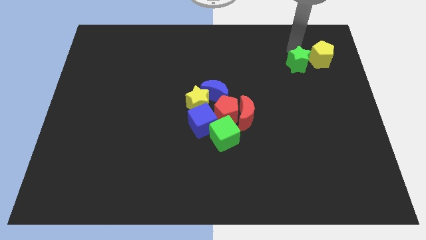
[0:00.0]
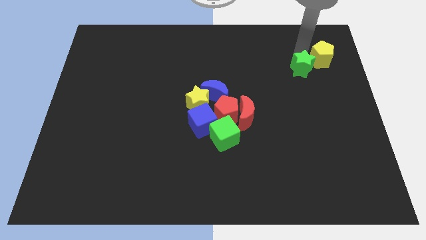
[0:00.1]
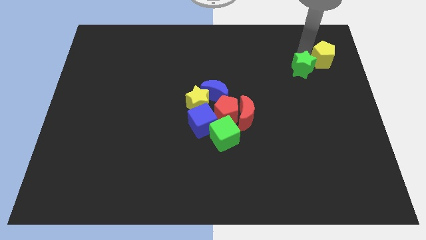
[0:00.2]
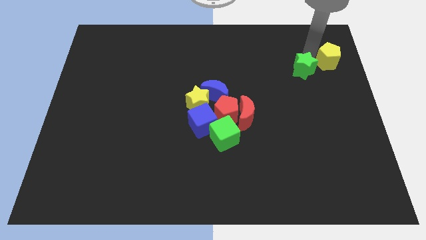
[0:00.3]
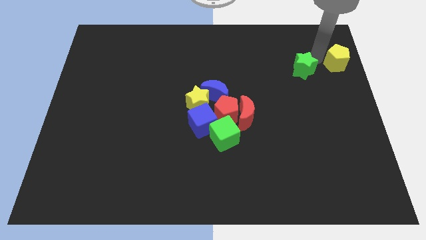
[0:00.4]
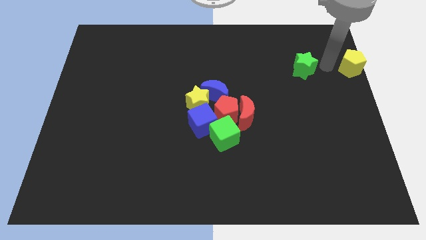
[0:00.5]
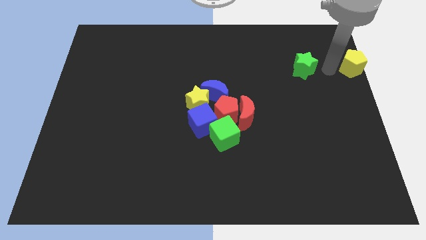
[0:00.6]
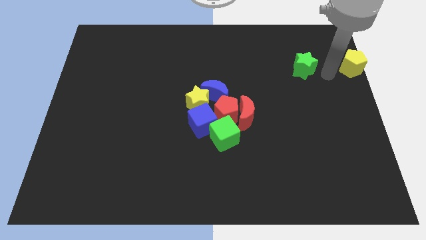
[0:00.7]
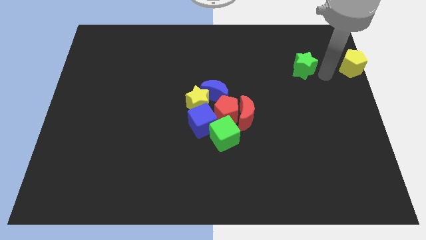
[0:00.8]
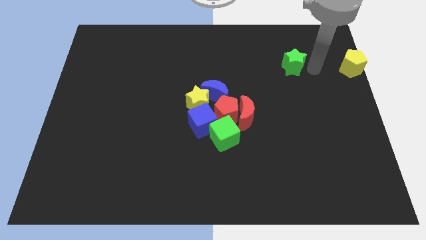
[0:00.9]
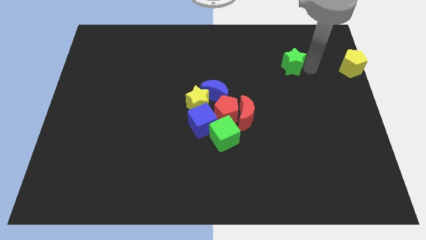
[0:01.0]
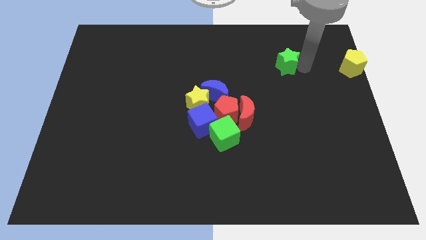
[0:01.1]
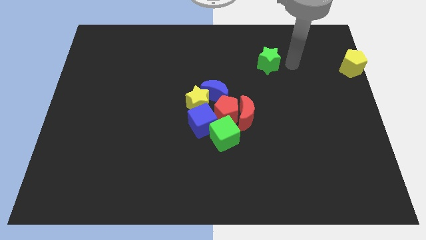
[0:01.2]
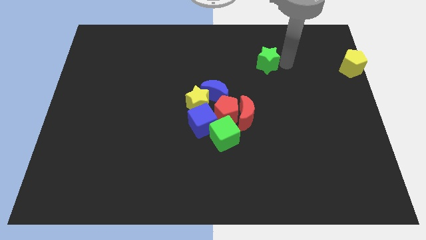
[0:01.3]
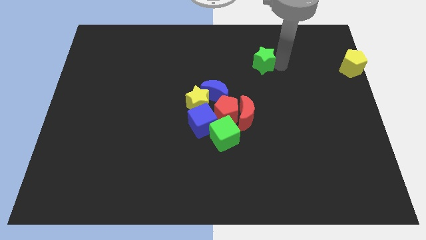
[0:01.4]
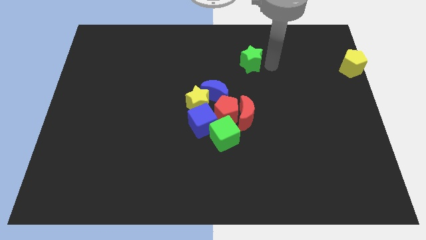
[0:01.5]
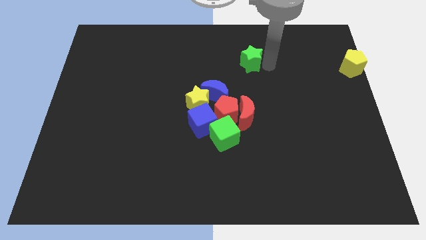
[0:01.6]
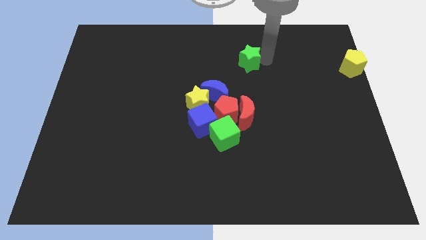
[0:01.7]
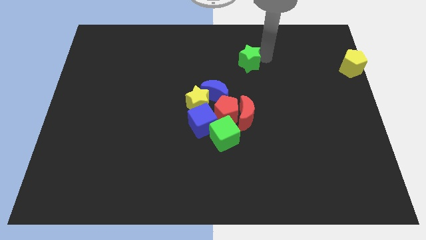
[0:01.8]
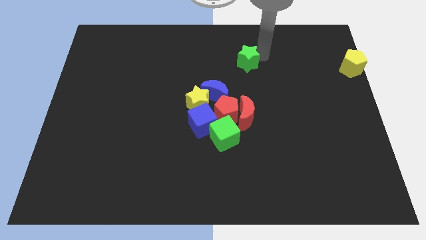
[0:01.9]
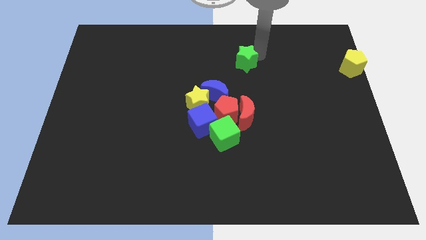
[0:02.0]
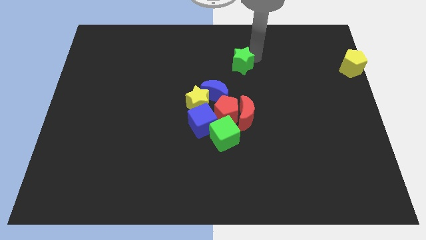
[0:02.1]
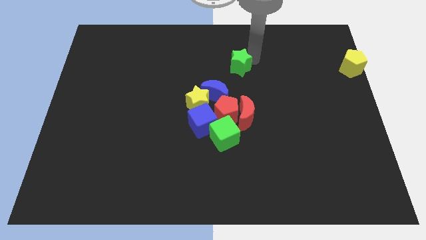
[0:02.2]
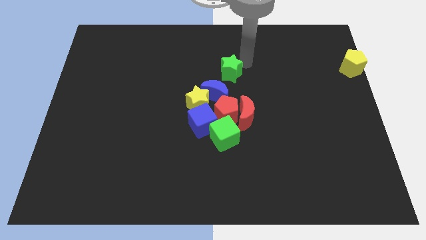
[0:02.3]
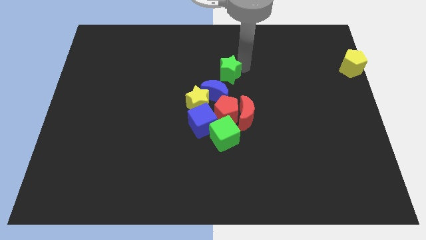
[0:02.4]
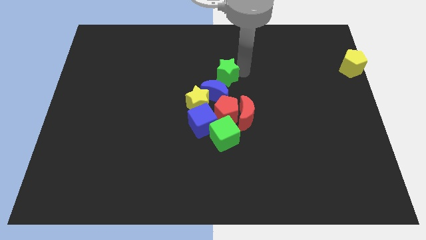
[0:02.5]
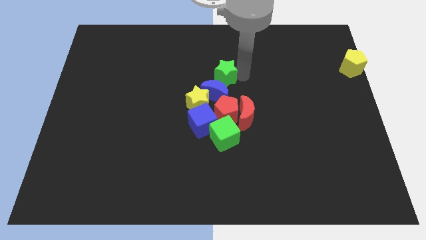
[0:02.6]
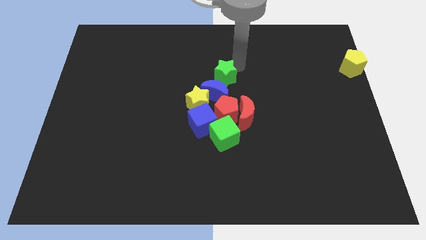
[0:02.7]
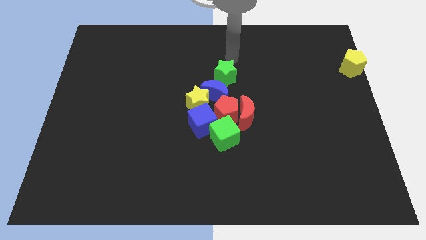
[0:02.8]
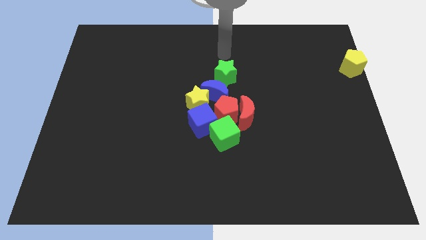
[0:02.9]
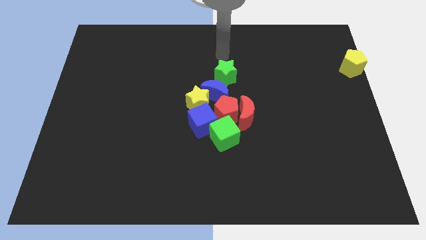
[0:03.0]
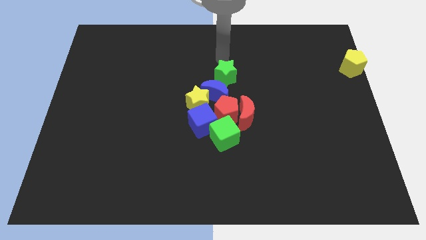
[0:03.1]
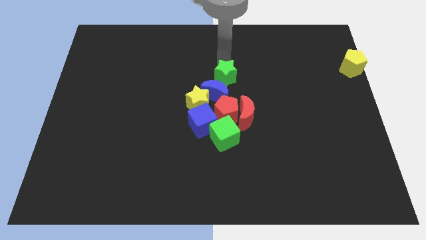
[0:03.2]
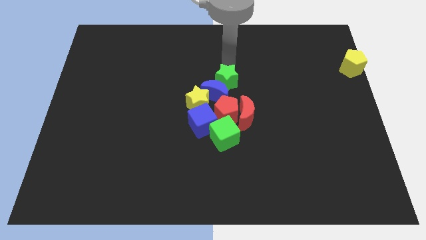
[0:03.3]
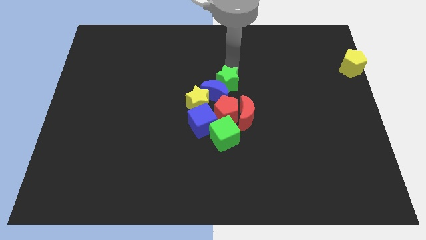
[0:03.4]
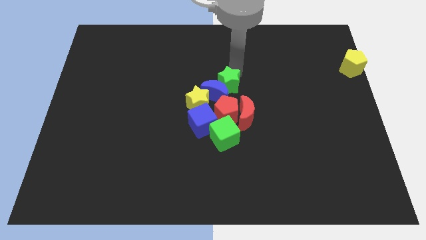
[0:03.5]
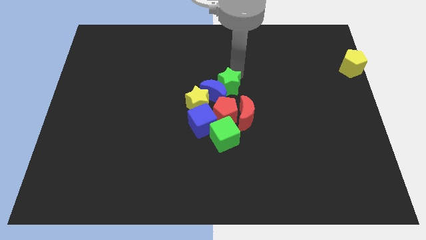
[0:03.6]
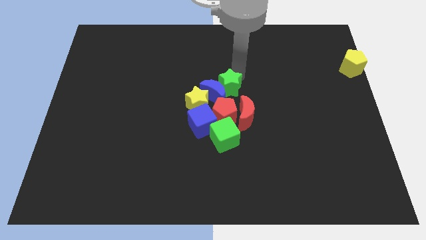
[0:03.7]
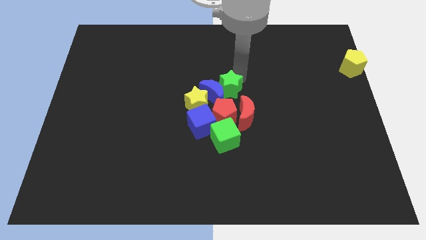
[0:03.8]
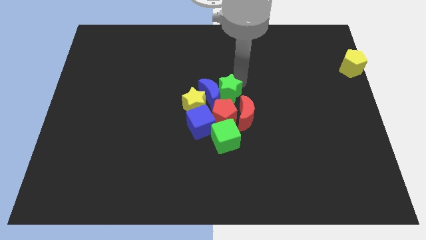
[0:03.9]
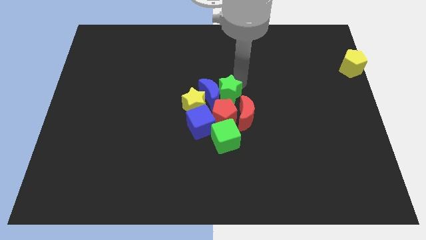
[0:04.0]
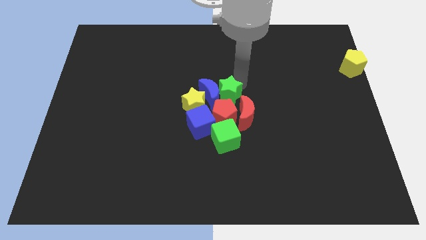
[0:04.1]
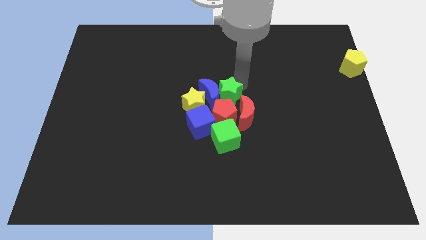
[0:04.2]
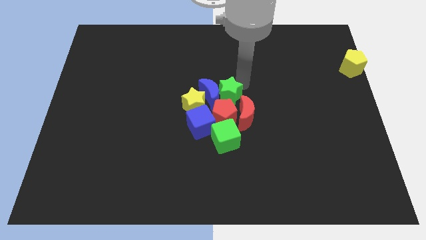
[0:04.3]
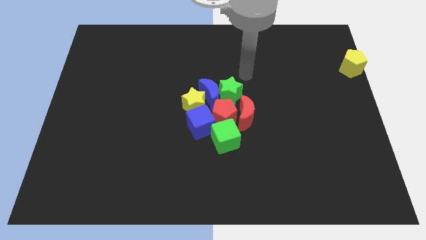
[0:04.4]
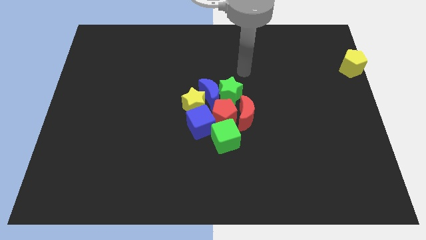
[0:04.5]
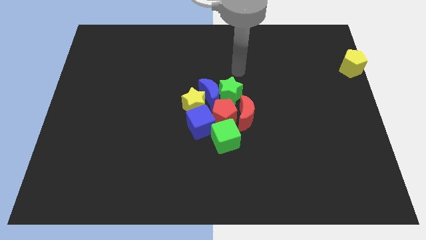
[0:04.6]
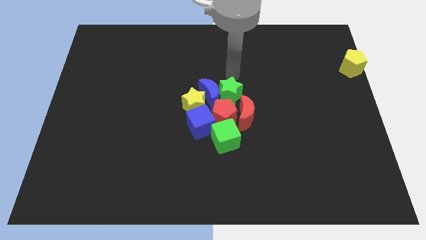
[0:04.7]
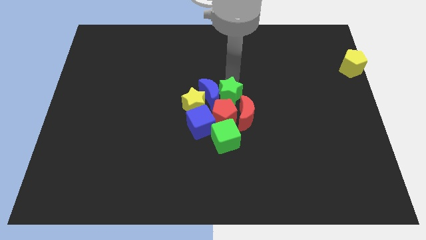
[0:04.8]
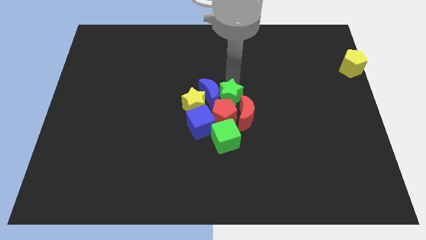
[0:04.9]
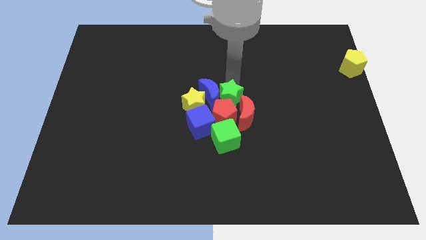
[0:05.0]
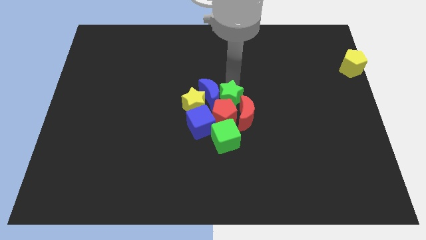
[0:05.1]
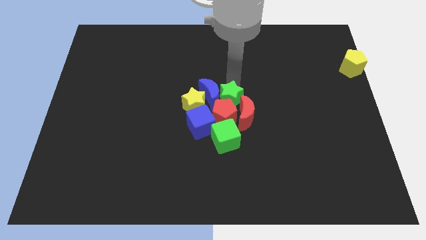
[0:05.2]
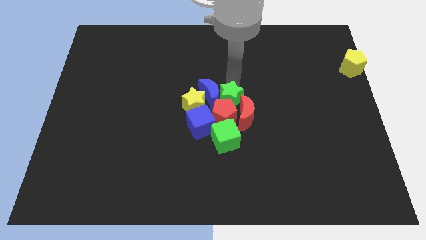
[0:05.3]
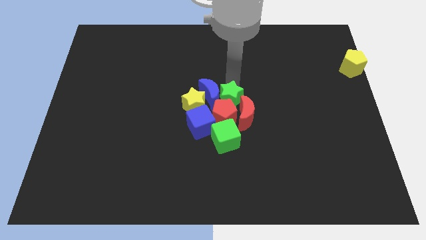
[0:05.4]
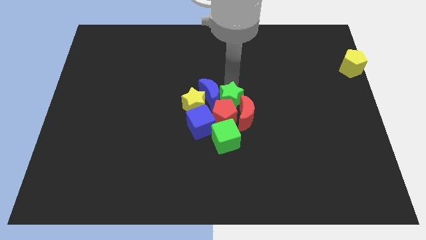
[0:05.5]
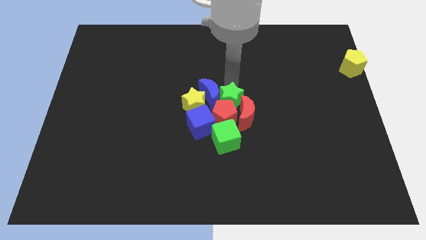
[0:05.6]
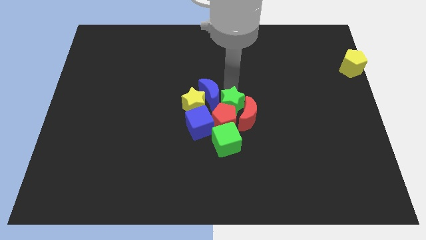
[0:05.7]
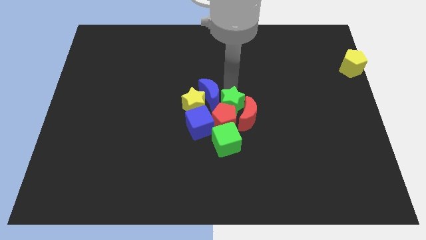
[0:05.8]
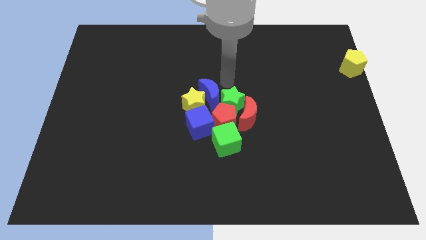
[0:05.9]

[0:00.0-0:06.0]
separate the green star and yellow pentagon

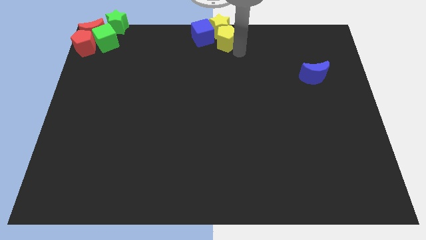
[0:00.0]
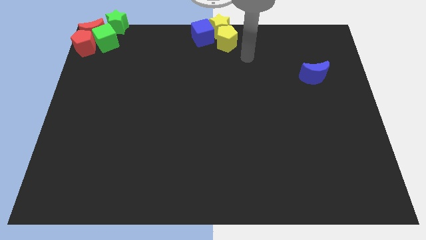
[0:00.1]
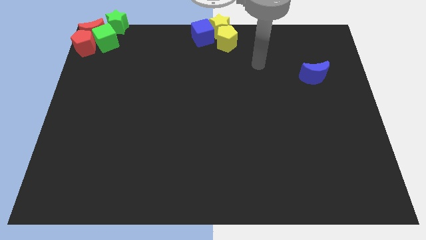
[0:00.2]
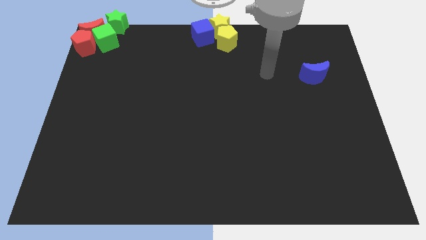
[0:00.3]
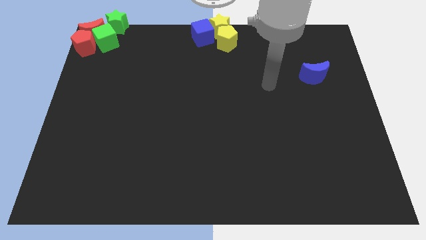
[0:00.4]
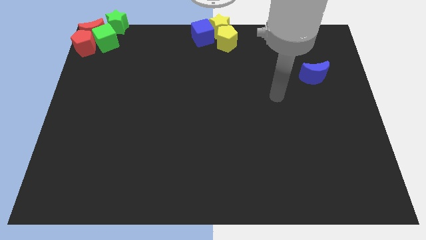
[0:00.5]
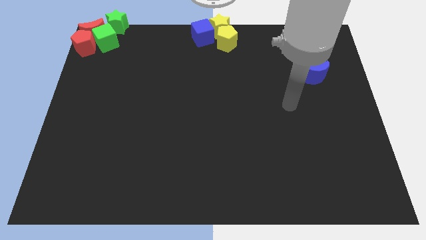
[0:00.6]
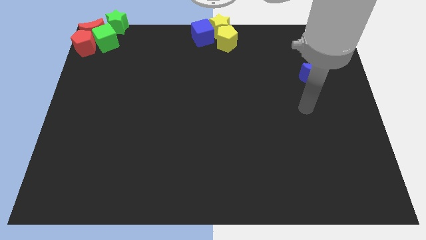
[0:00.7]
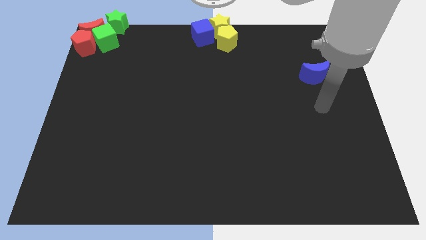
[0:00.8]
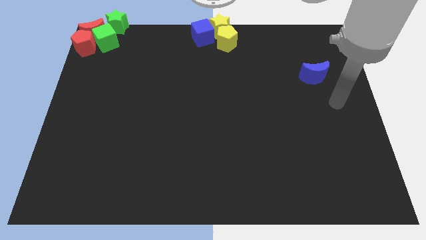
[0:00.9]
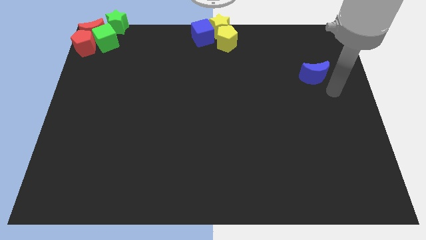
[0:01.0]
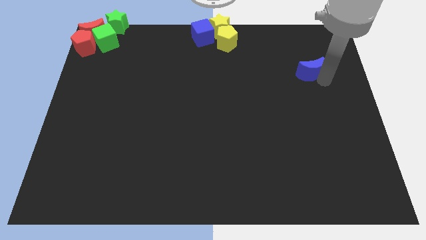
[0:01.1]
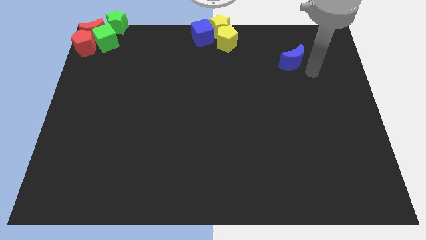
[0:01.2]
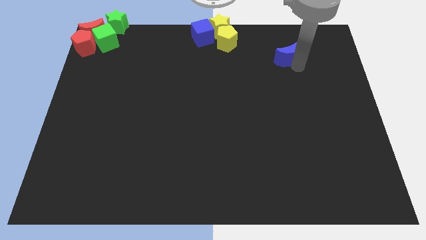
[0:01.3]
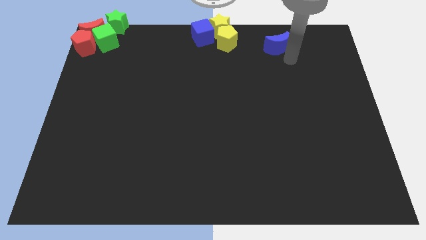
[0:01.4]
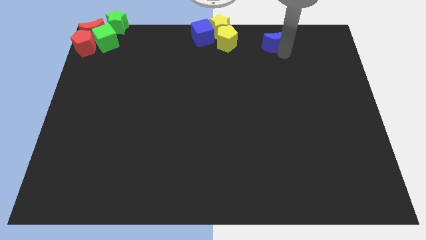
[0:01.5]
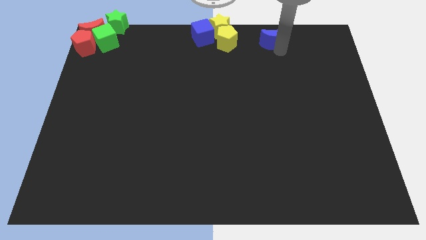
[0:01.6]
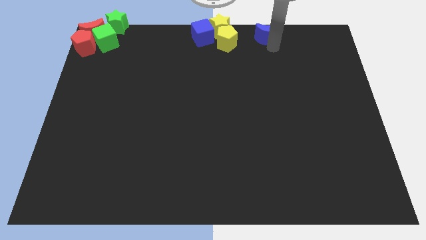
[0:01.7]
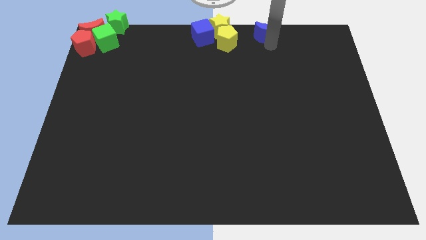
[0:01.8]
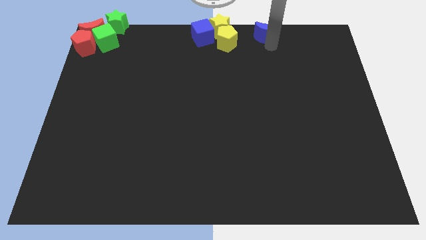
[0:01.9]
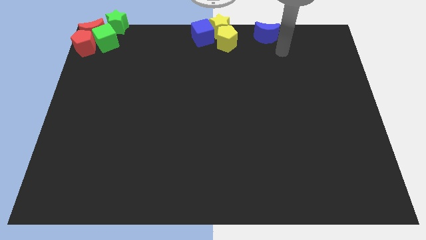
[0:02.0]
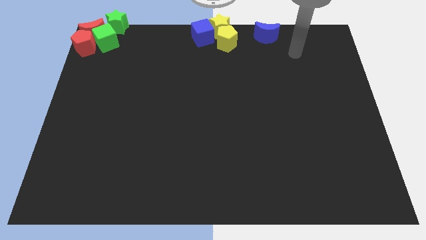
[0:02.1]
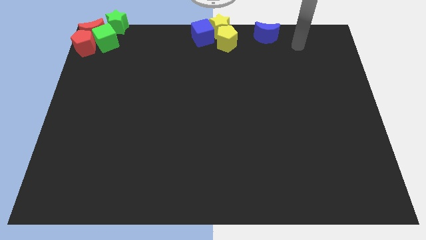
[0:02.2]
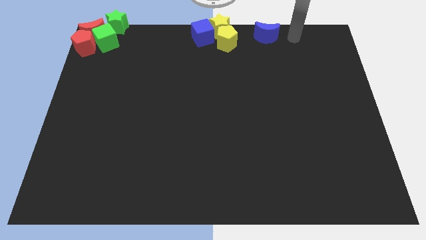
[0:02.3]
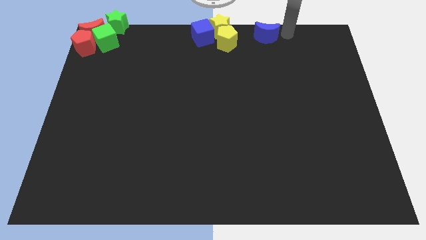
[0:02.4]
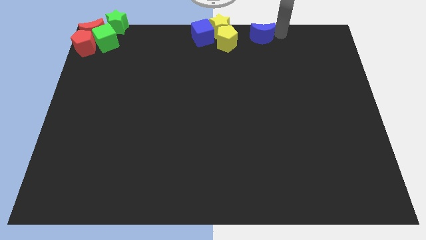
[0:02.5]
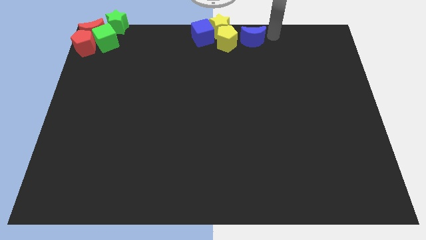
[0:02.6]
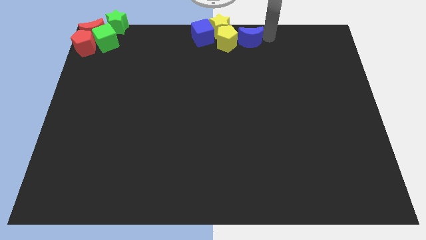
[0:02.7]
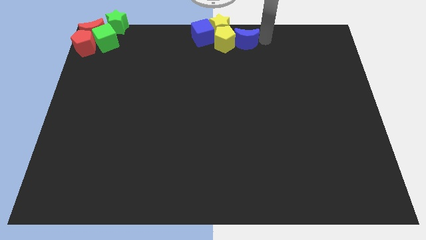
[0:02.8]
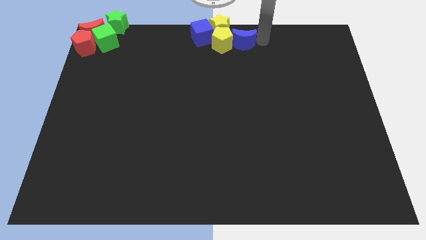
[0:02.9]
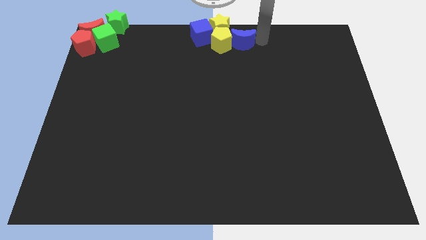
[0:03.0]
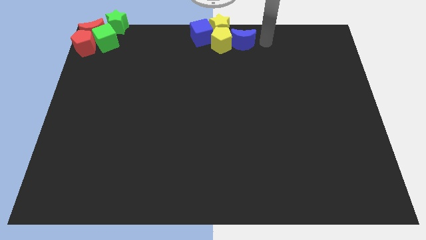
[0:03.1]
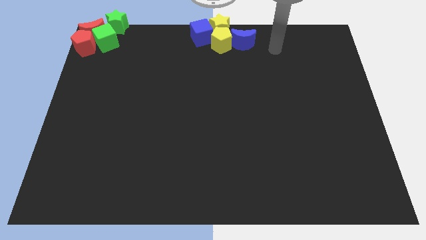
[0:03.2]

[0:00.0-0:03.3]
push the blue crescent into the right side of the yellow pentagon
